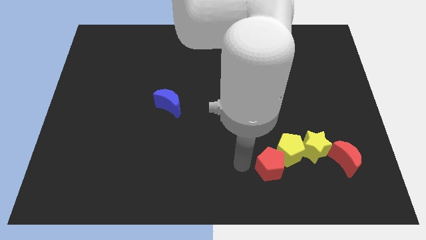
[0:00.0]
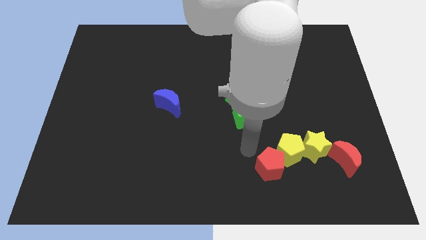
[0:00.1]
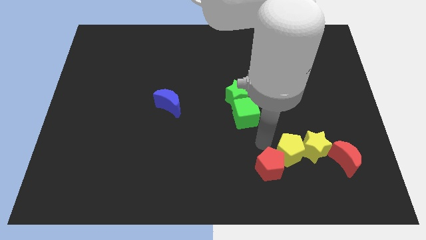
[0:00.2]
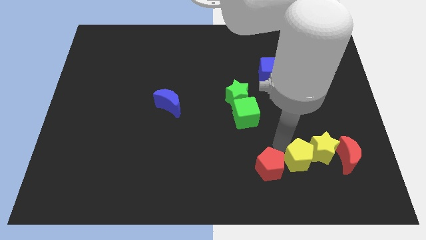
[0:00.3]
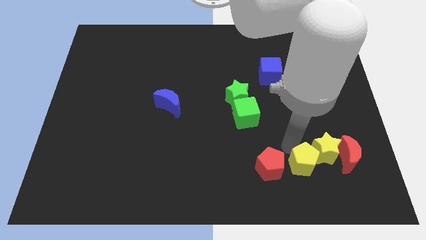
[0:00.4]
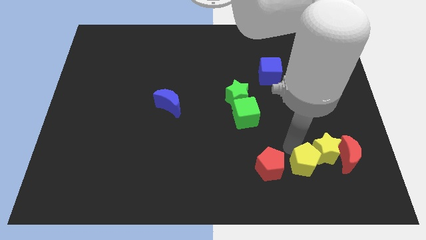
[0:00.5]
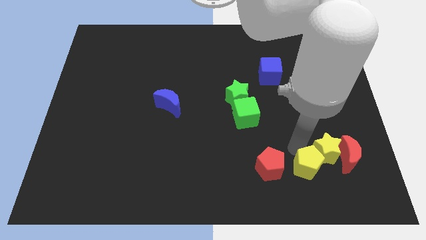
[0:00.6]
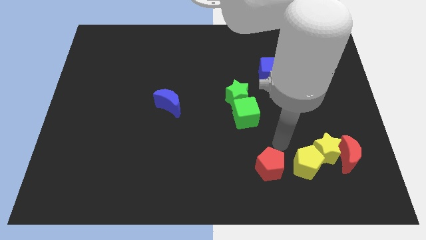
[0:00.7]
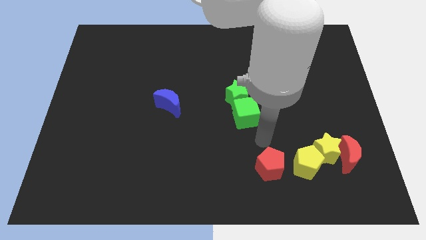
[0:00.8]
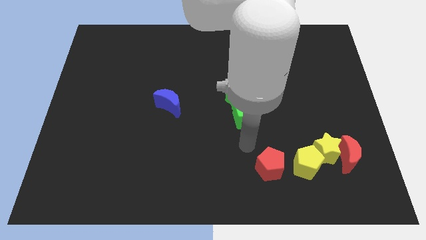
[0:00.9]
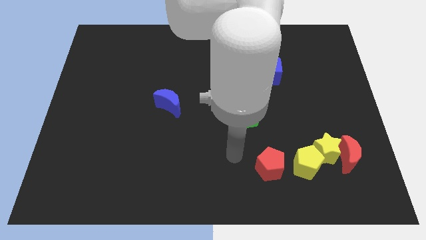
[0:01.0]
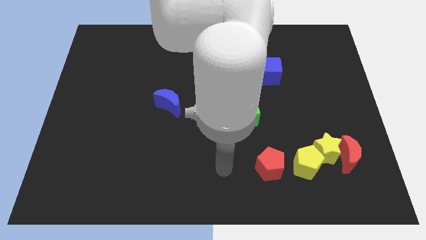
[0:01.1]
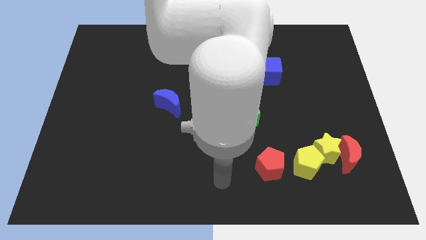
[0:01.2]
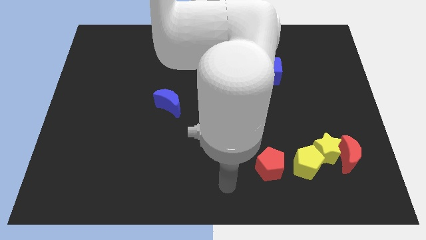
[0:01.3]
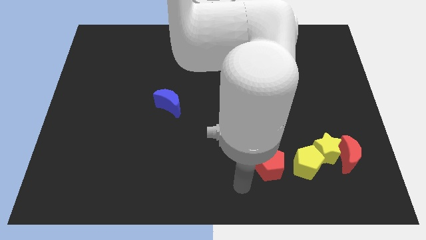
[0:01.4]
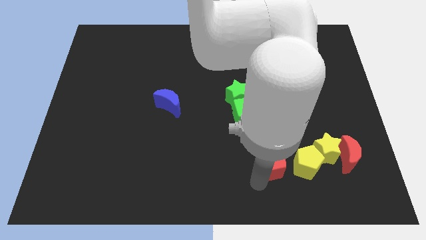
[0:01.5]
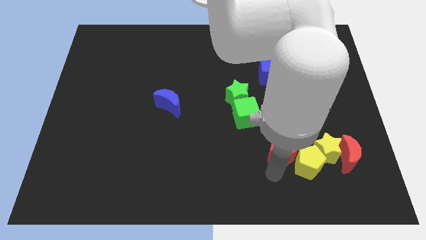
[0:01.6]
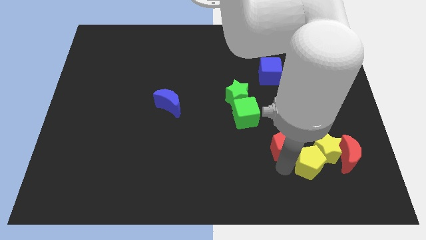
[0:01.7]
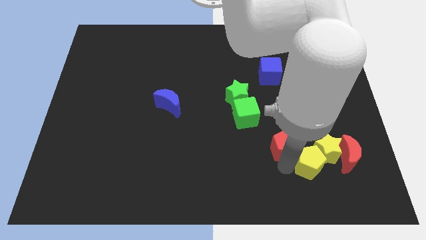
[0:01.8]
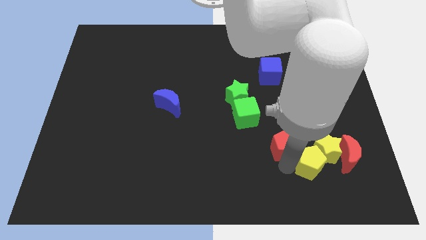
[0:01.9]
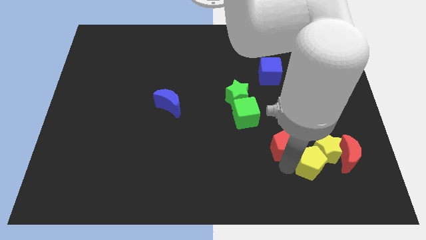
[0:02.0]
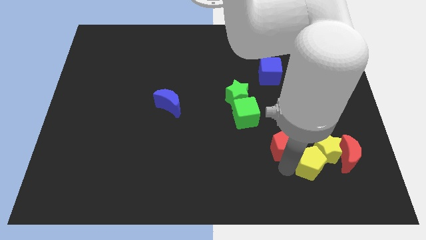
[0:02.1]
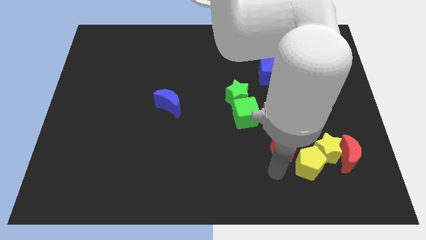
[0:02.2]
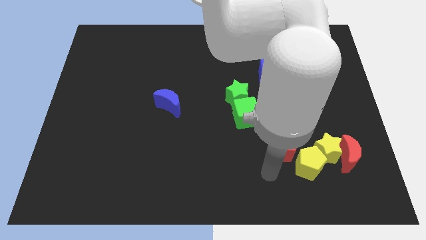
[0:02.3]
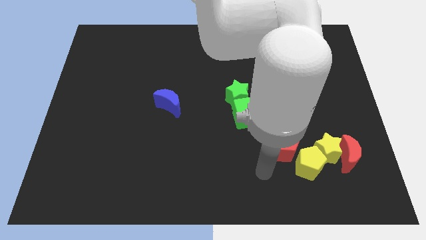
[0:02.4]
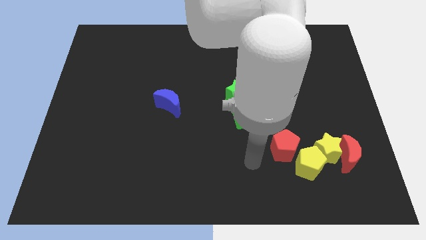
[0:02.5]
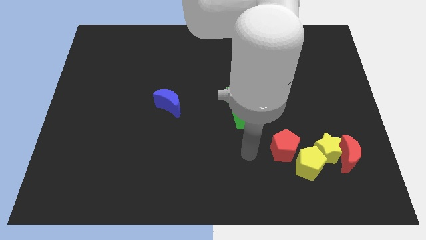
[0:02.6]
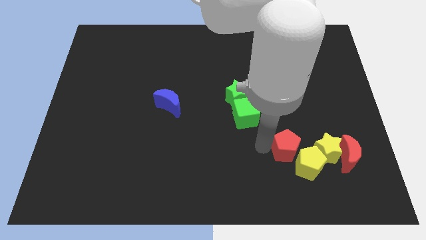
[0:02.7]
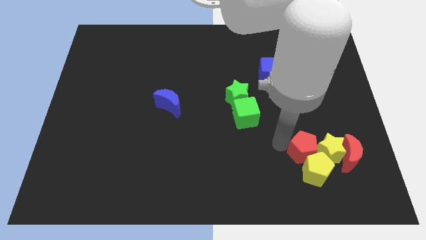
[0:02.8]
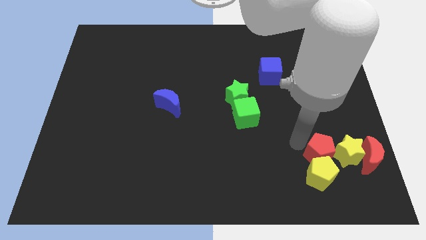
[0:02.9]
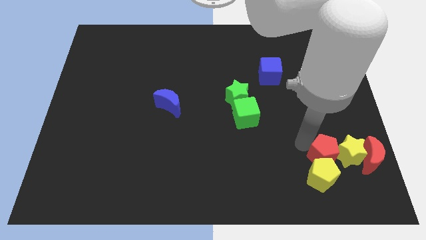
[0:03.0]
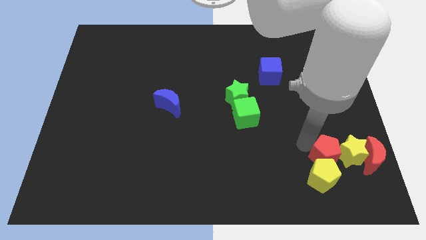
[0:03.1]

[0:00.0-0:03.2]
push both yellow blocks and red blocks to right side of the board

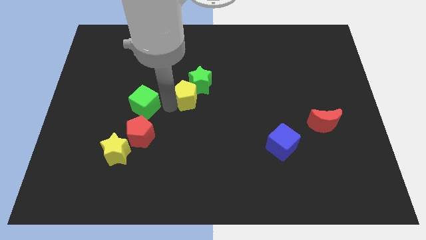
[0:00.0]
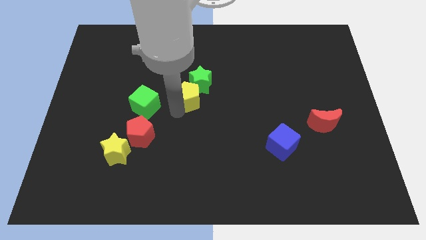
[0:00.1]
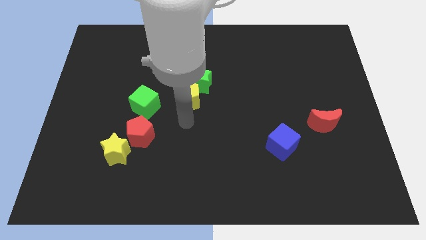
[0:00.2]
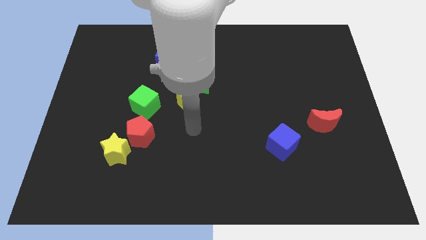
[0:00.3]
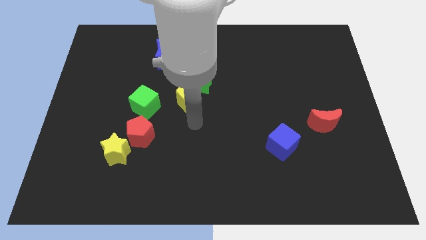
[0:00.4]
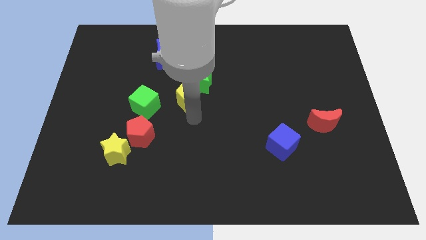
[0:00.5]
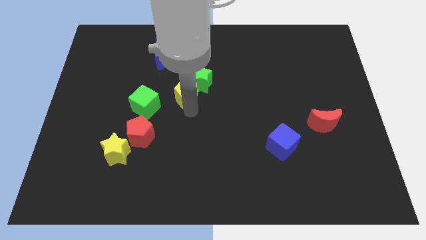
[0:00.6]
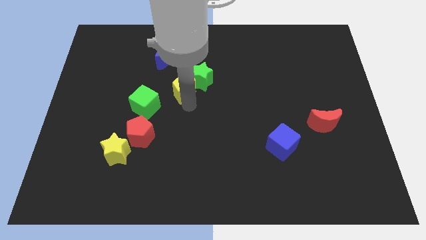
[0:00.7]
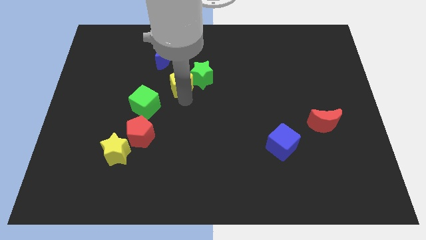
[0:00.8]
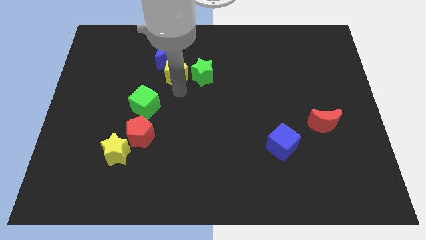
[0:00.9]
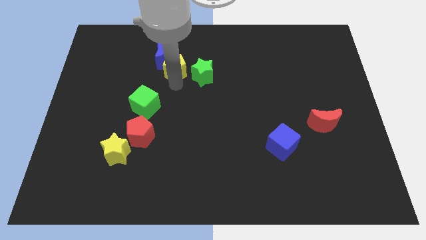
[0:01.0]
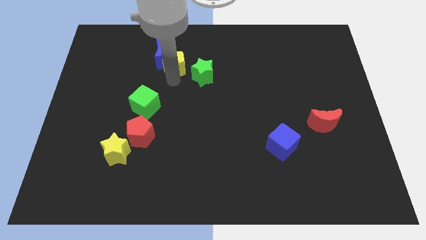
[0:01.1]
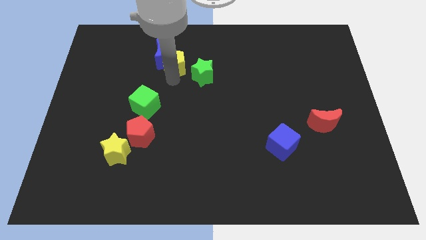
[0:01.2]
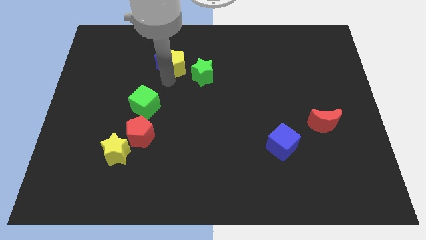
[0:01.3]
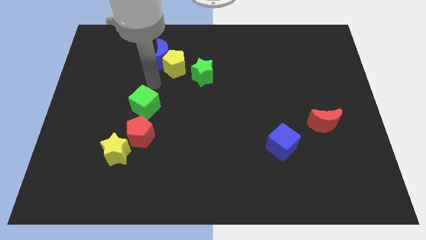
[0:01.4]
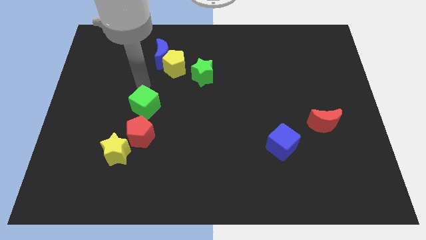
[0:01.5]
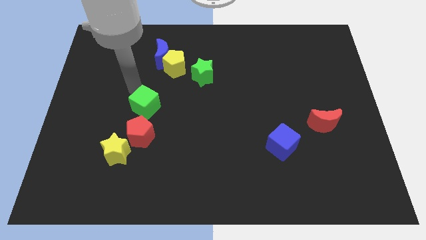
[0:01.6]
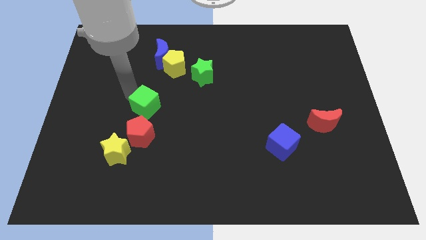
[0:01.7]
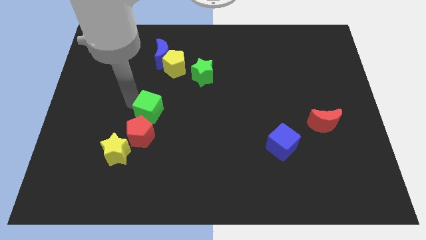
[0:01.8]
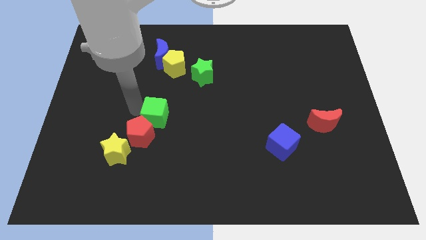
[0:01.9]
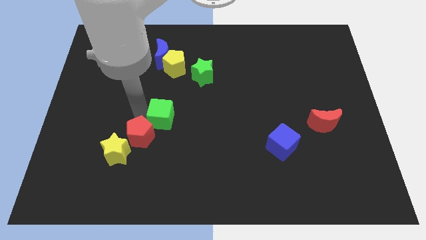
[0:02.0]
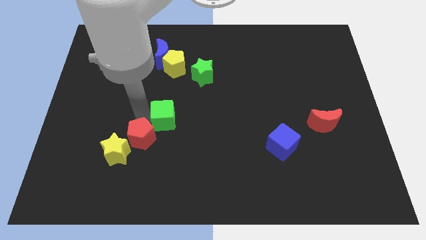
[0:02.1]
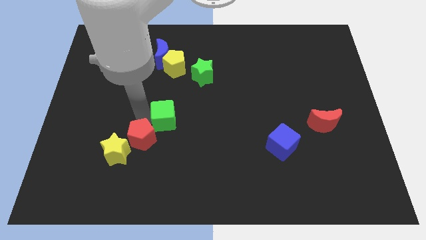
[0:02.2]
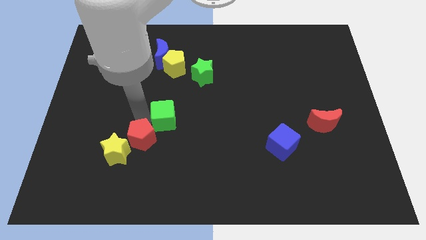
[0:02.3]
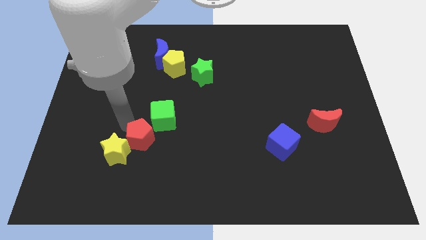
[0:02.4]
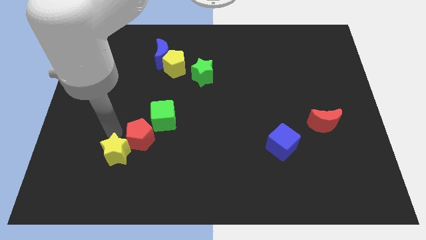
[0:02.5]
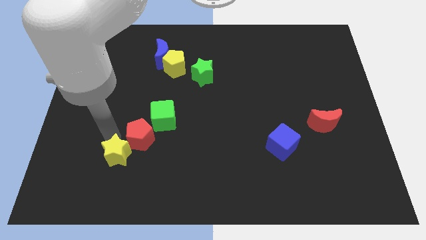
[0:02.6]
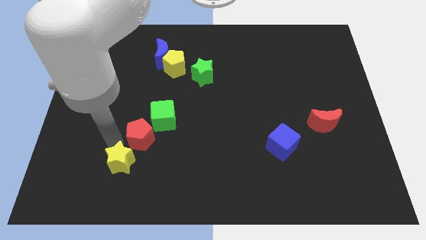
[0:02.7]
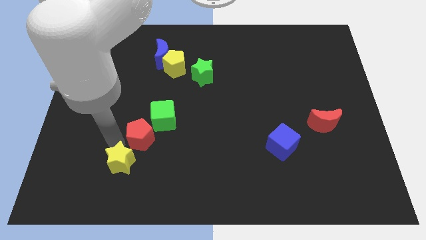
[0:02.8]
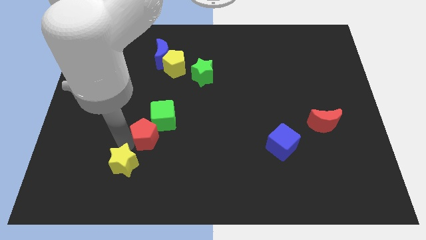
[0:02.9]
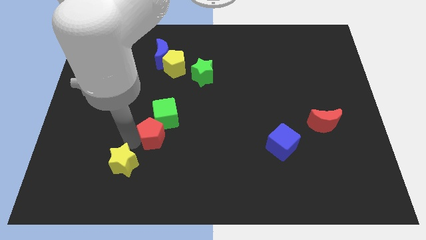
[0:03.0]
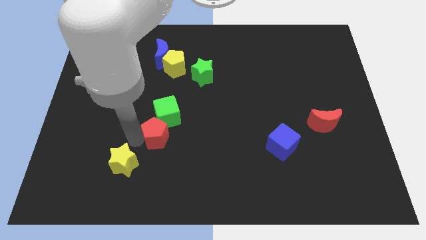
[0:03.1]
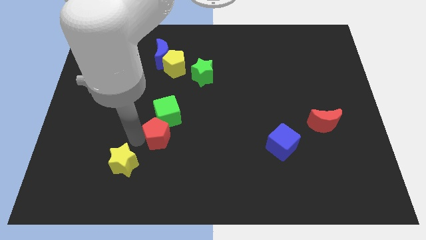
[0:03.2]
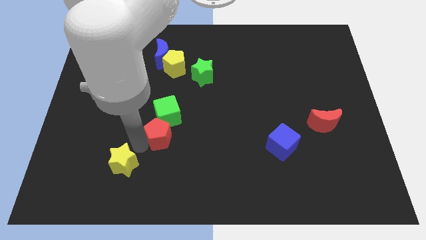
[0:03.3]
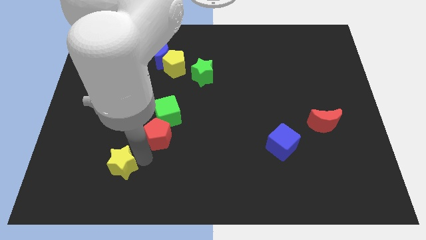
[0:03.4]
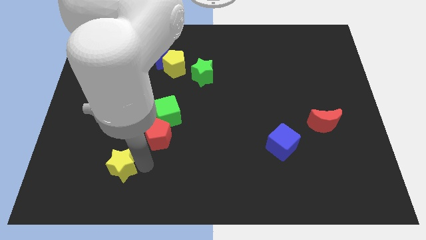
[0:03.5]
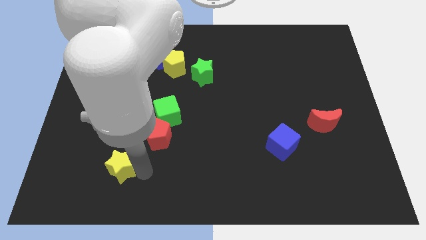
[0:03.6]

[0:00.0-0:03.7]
put the red pentagon into the green cube

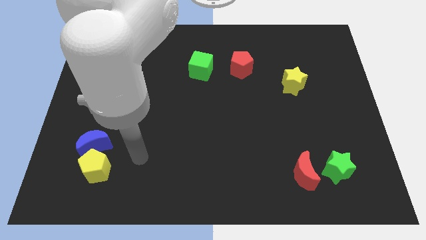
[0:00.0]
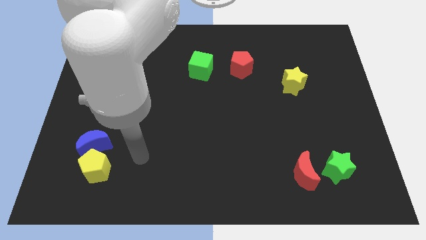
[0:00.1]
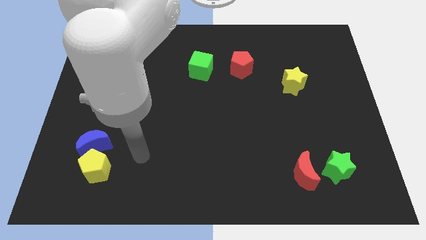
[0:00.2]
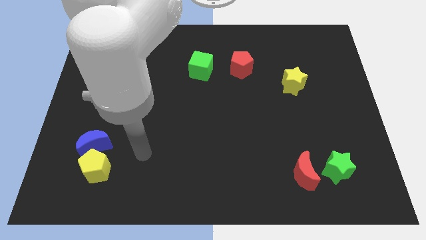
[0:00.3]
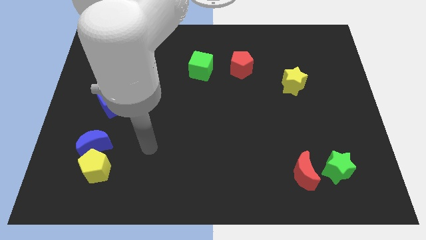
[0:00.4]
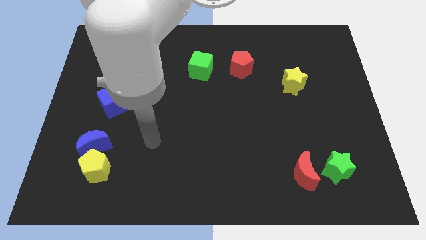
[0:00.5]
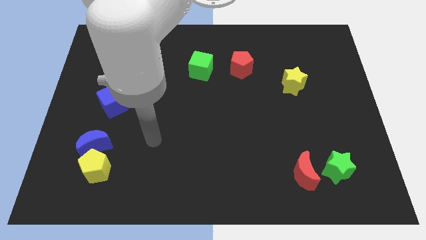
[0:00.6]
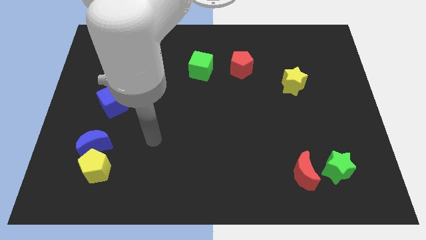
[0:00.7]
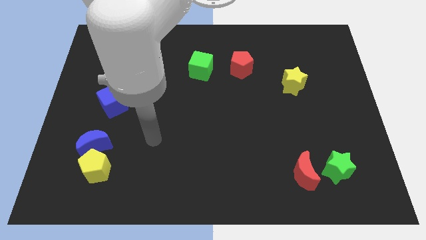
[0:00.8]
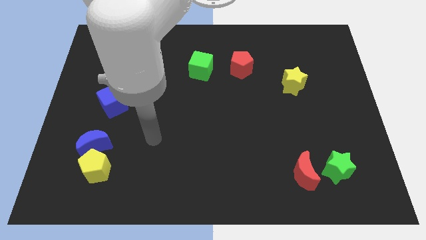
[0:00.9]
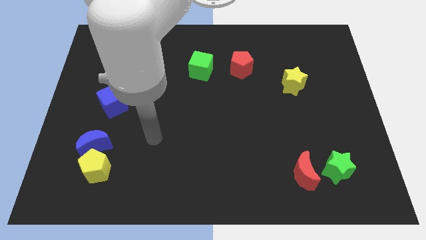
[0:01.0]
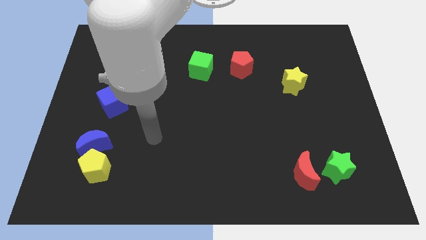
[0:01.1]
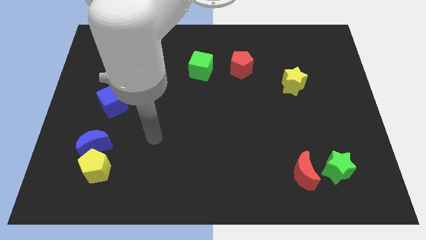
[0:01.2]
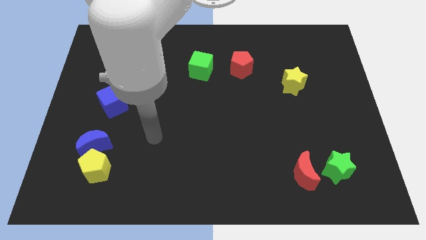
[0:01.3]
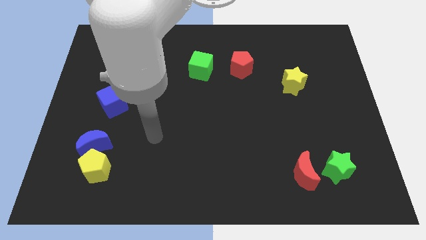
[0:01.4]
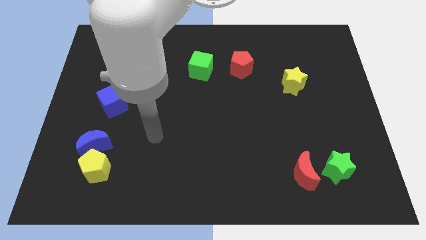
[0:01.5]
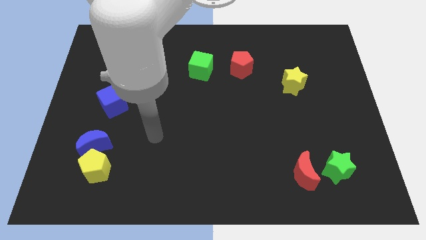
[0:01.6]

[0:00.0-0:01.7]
place the arm diagonal to the blue cube

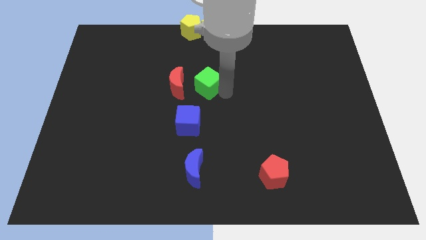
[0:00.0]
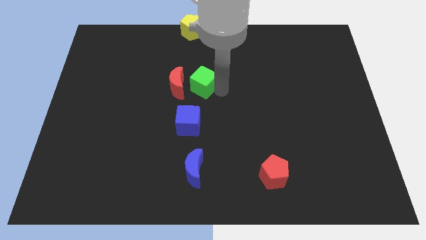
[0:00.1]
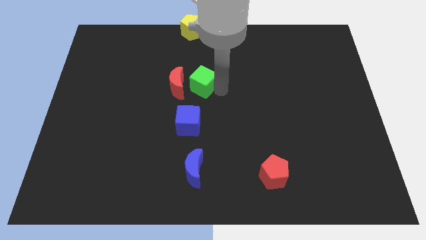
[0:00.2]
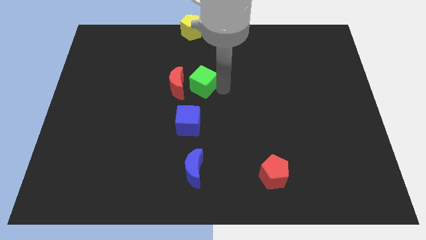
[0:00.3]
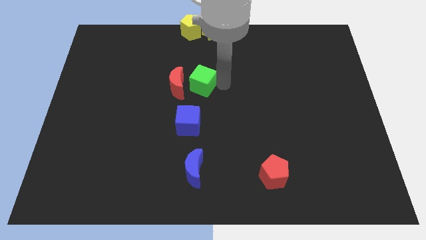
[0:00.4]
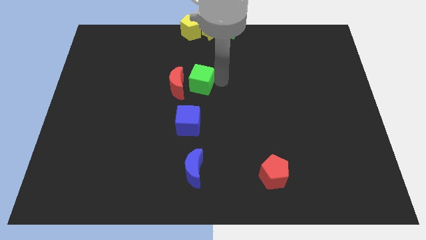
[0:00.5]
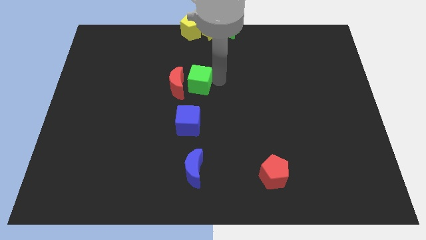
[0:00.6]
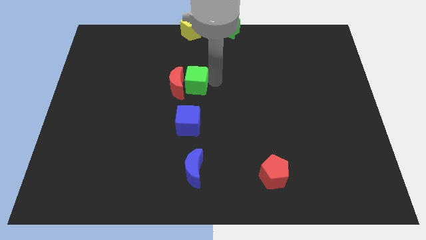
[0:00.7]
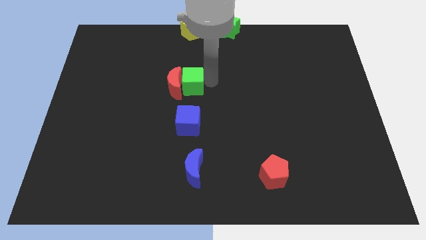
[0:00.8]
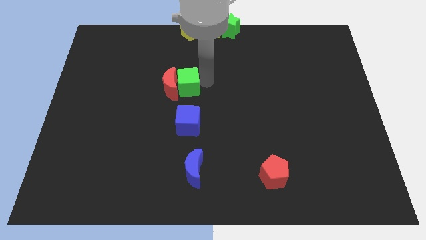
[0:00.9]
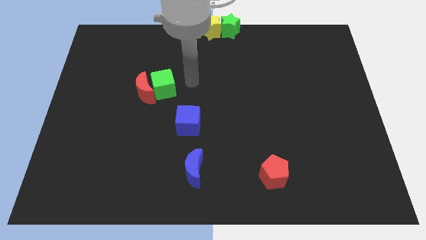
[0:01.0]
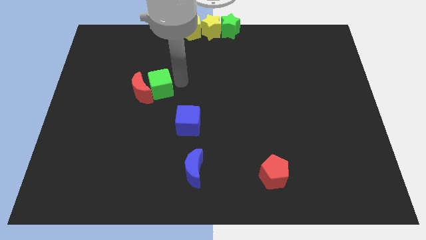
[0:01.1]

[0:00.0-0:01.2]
move the green cube into the red moon
